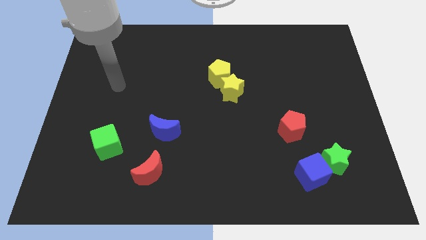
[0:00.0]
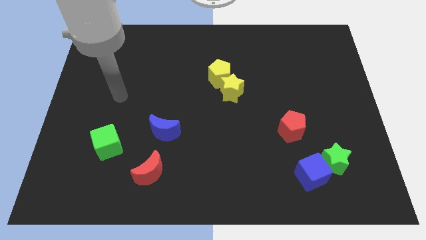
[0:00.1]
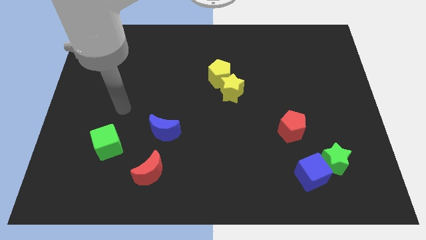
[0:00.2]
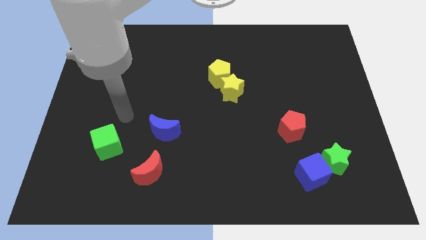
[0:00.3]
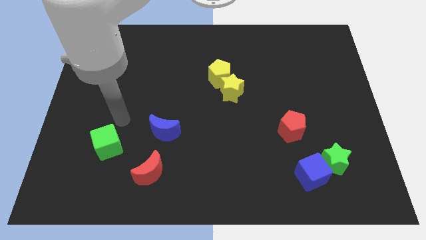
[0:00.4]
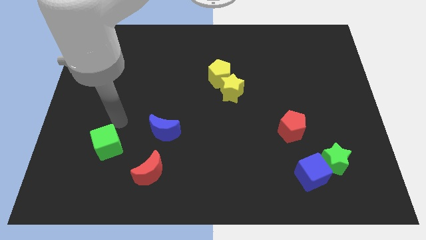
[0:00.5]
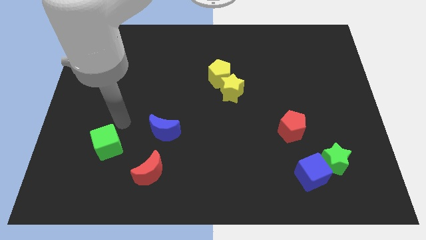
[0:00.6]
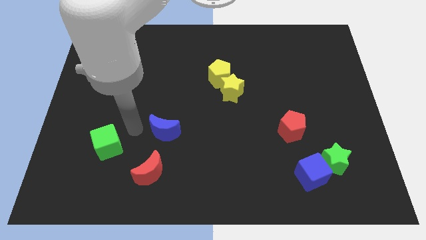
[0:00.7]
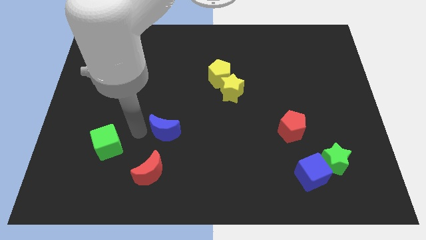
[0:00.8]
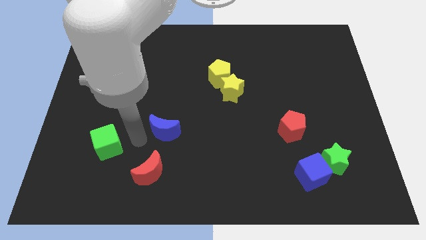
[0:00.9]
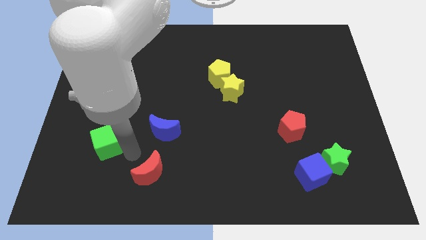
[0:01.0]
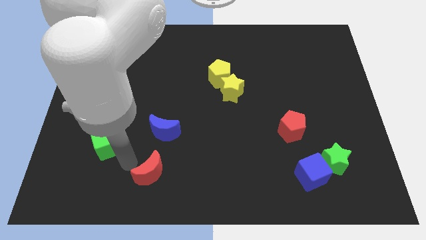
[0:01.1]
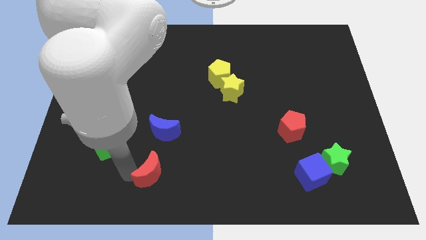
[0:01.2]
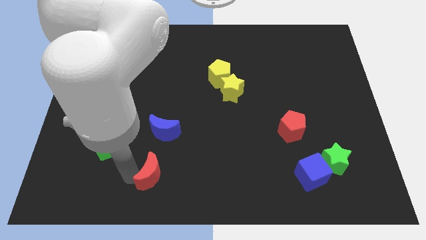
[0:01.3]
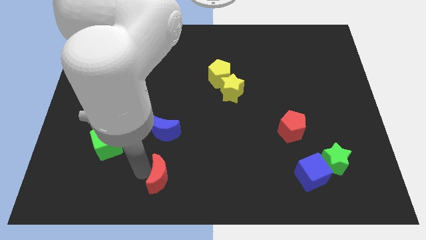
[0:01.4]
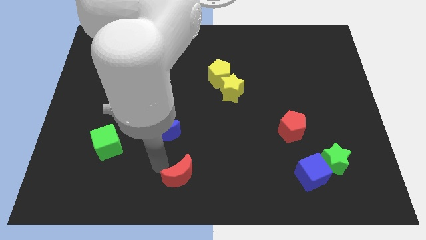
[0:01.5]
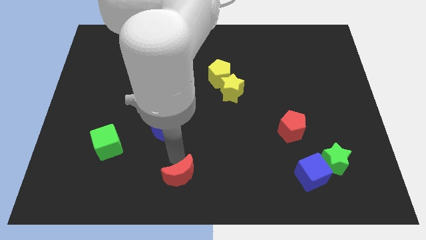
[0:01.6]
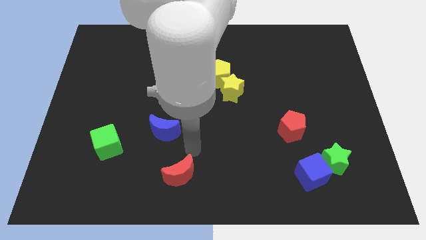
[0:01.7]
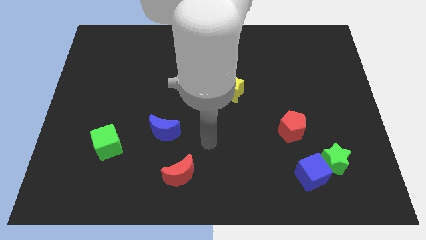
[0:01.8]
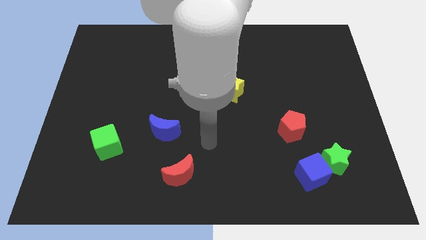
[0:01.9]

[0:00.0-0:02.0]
move red crescent slightly to the right

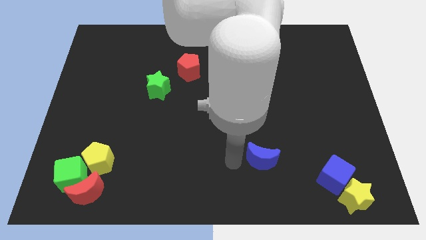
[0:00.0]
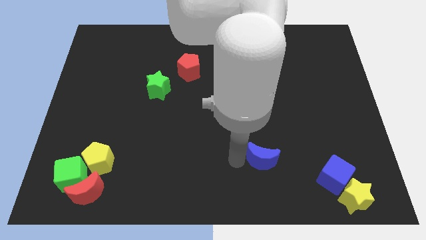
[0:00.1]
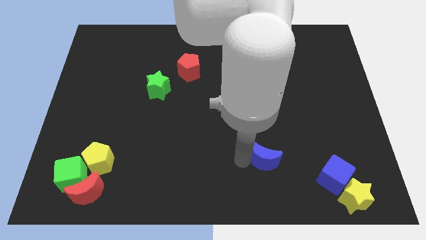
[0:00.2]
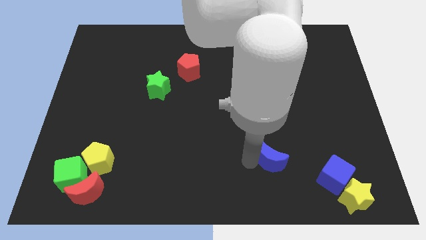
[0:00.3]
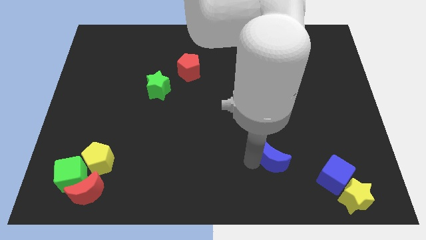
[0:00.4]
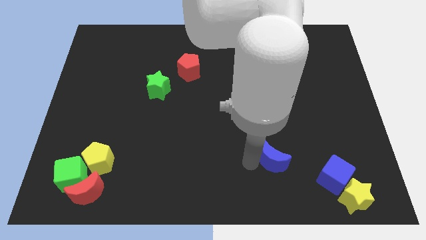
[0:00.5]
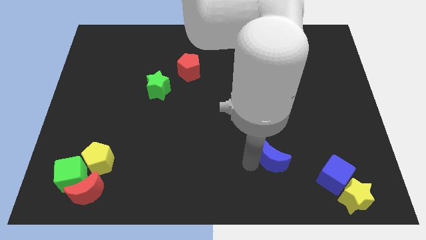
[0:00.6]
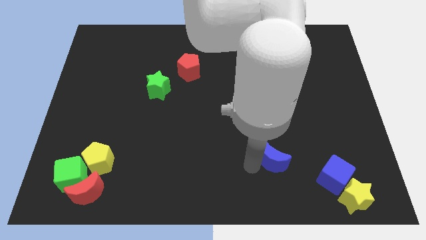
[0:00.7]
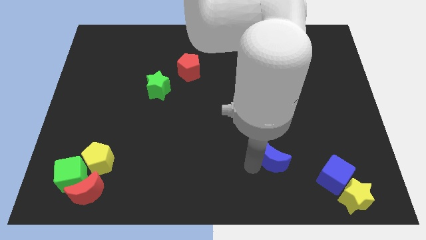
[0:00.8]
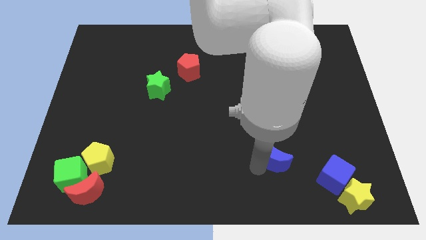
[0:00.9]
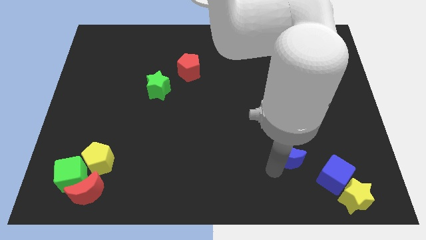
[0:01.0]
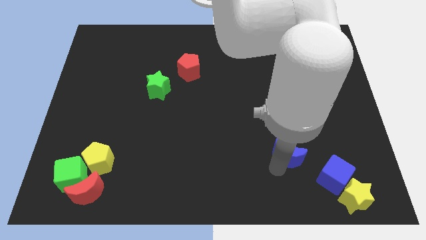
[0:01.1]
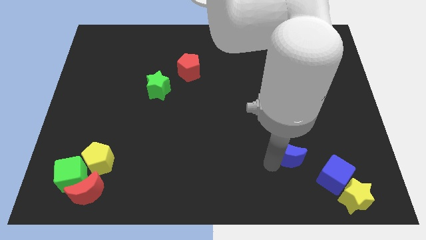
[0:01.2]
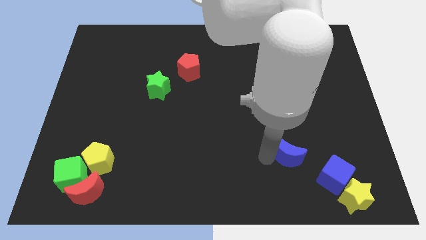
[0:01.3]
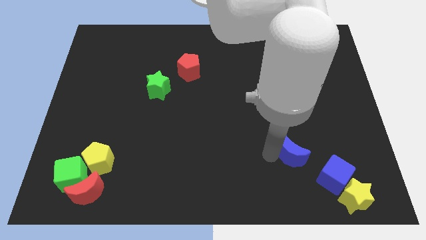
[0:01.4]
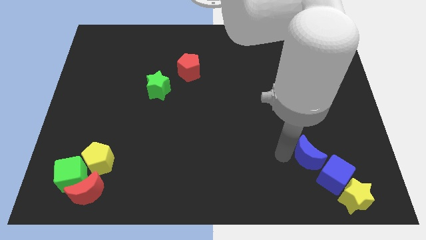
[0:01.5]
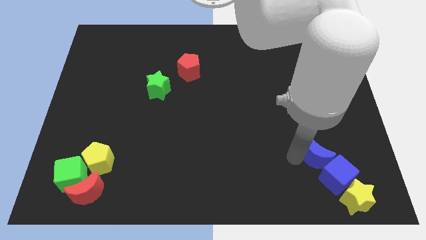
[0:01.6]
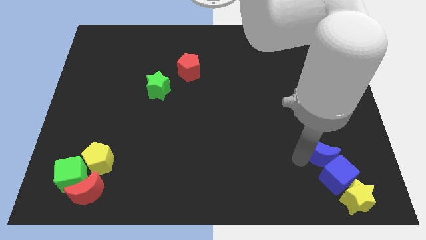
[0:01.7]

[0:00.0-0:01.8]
push the blue crescent into the blue cube

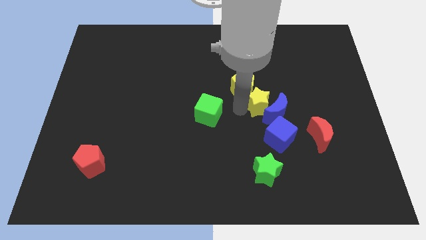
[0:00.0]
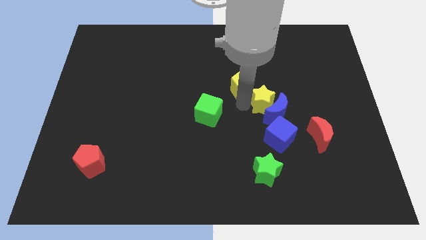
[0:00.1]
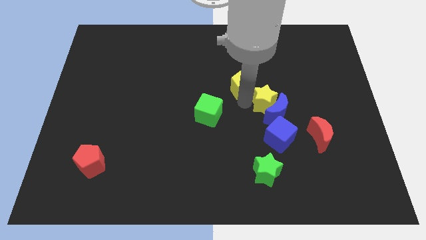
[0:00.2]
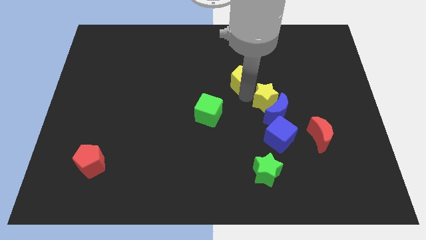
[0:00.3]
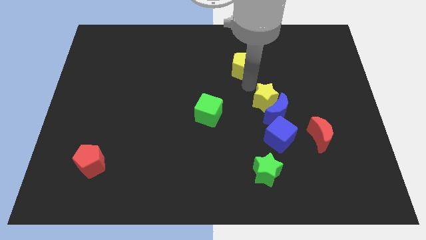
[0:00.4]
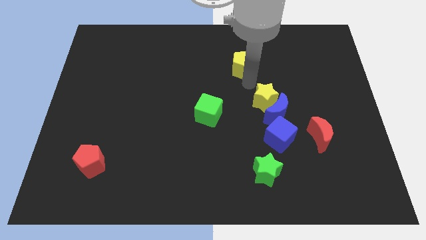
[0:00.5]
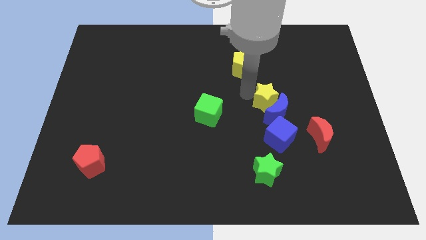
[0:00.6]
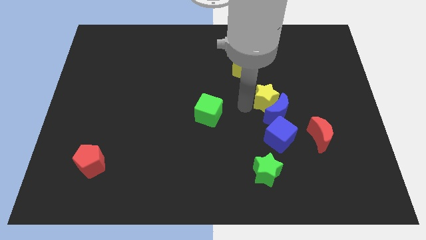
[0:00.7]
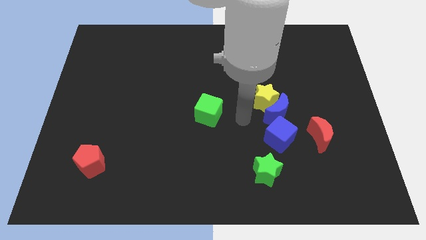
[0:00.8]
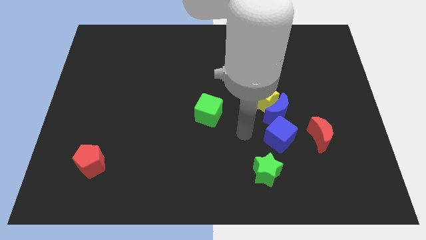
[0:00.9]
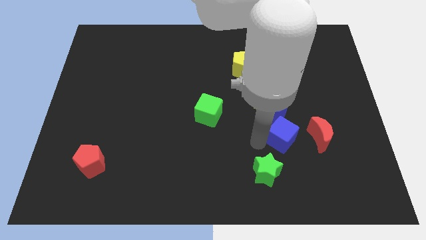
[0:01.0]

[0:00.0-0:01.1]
push the yellow pentagon towards the top side of the board

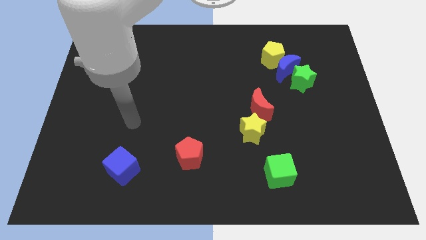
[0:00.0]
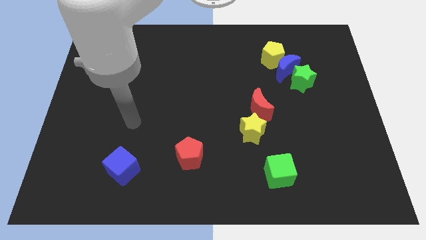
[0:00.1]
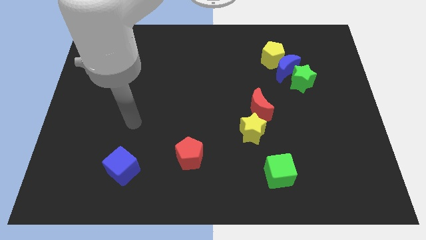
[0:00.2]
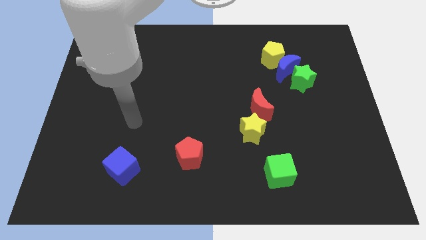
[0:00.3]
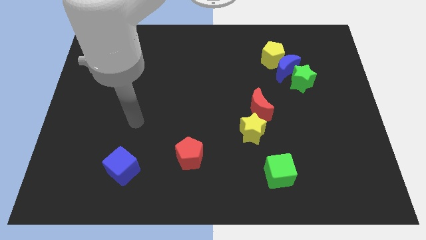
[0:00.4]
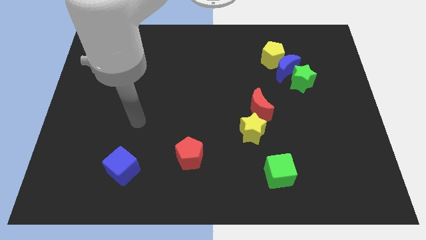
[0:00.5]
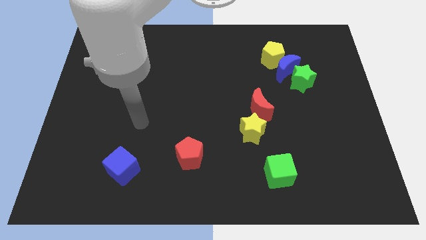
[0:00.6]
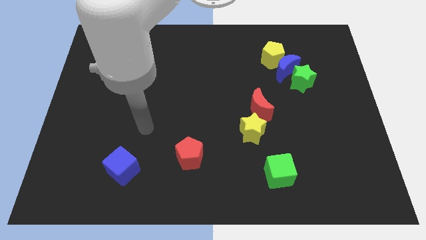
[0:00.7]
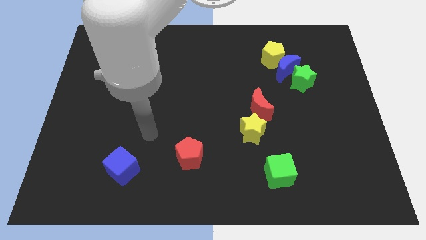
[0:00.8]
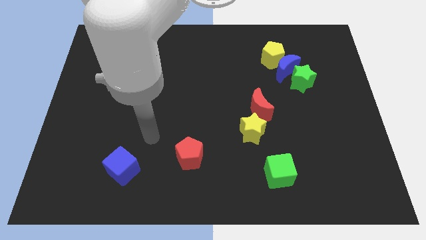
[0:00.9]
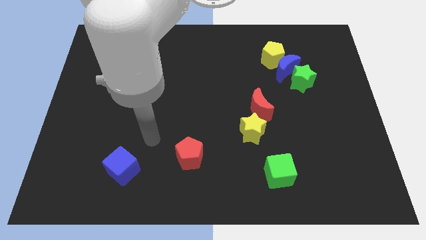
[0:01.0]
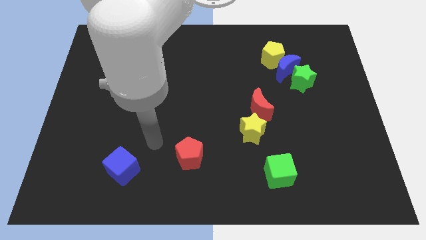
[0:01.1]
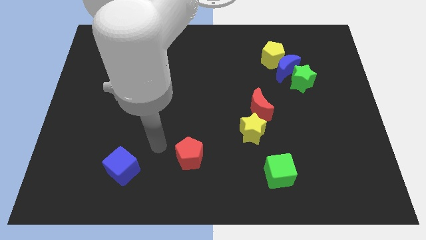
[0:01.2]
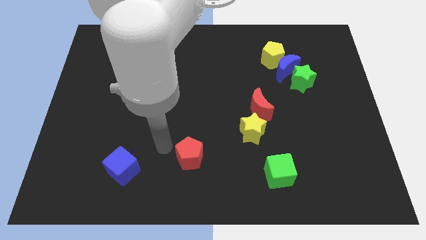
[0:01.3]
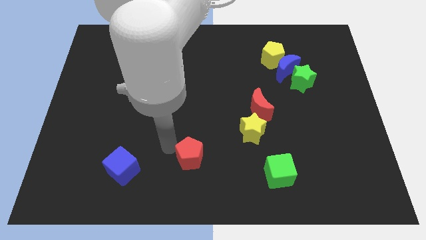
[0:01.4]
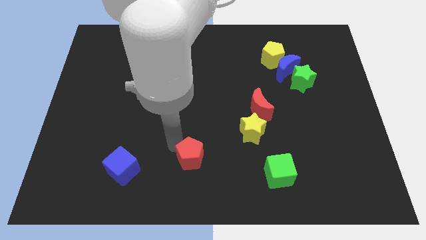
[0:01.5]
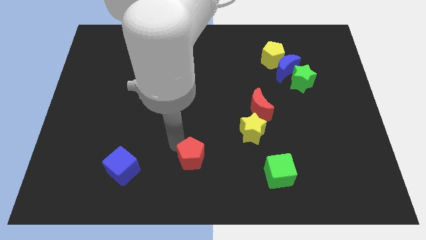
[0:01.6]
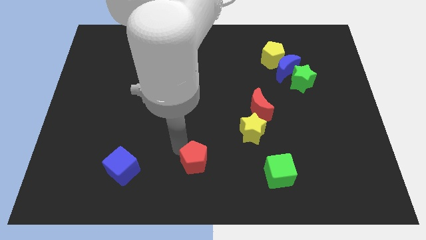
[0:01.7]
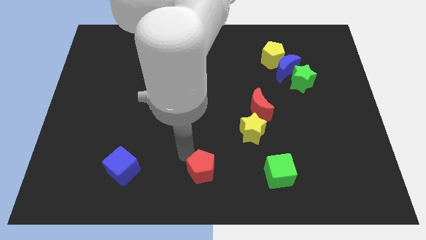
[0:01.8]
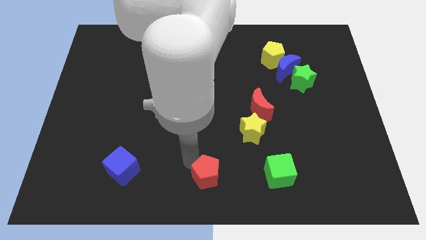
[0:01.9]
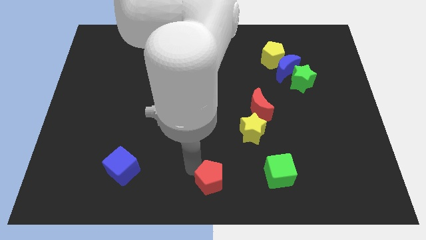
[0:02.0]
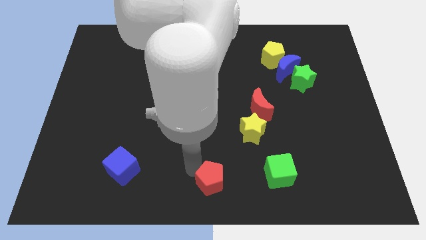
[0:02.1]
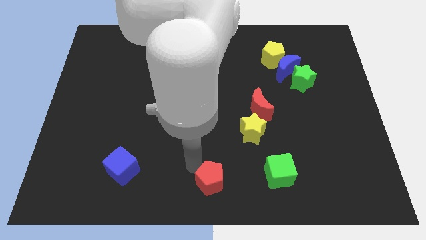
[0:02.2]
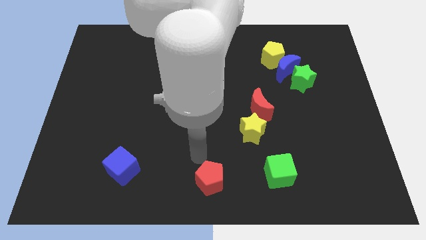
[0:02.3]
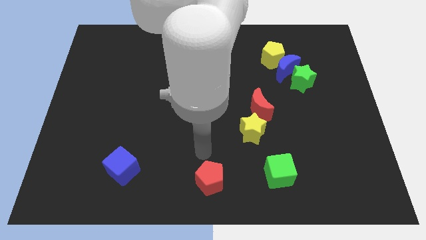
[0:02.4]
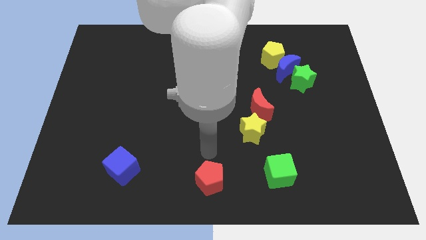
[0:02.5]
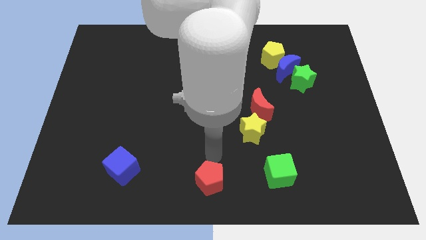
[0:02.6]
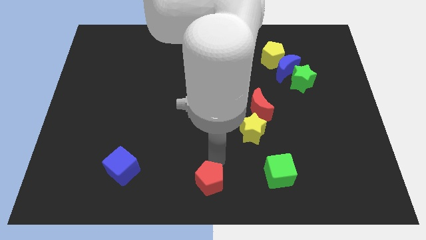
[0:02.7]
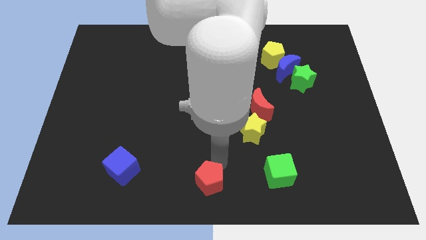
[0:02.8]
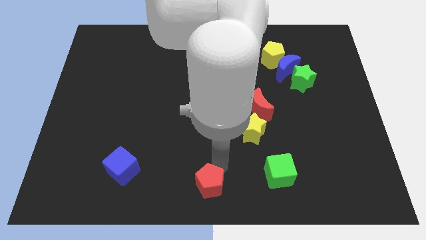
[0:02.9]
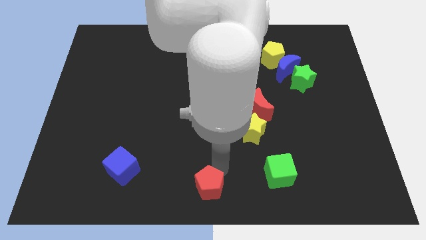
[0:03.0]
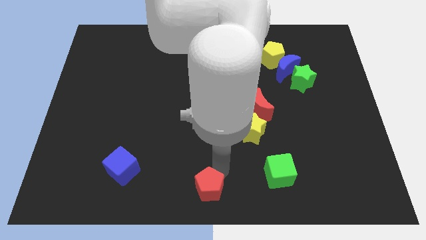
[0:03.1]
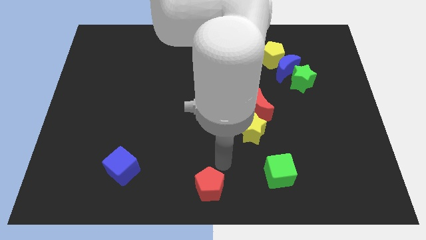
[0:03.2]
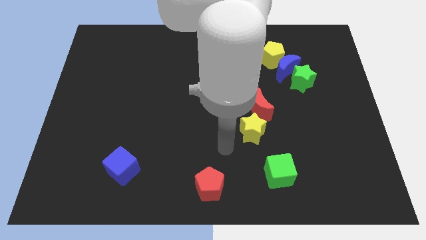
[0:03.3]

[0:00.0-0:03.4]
place red pentagon to the bottom center of the board

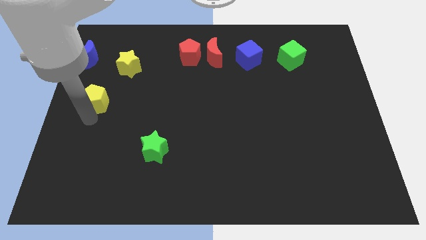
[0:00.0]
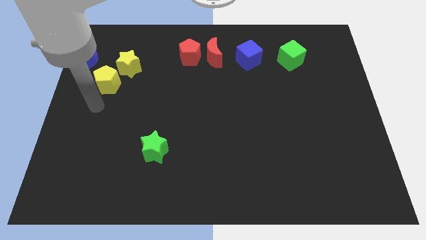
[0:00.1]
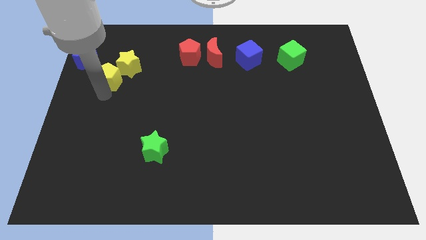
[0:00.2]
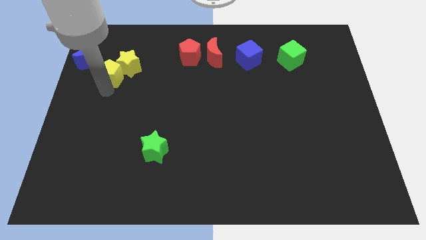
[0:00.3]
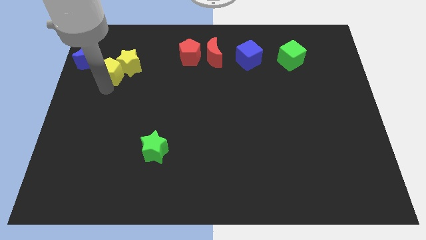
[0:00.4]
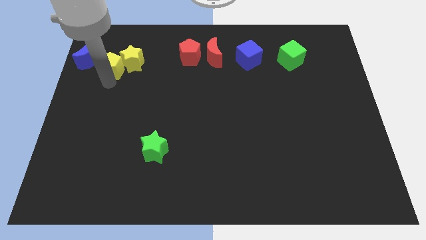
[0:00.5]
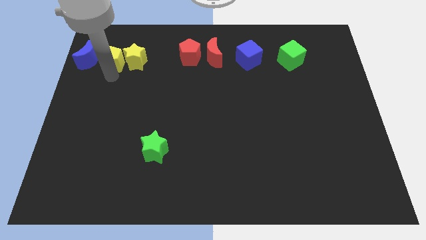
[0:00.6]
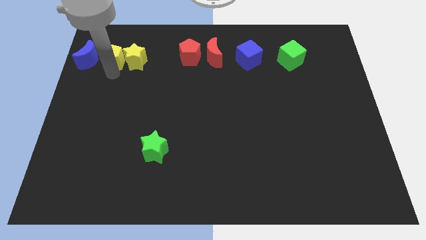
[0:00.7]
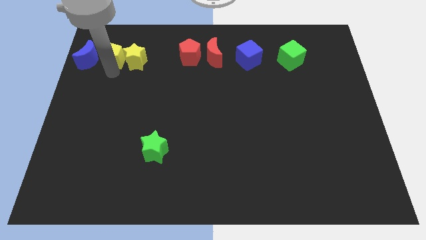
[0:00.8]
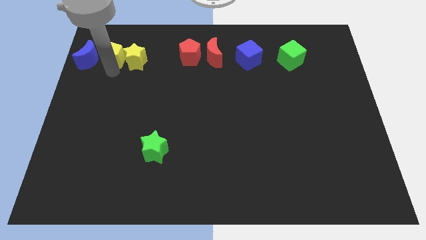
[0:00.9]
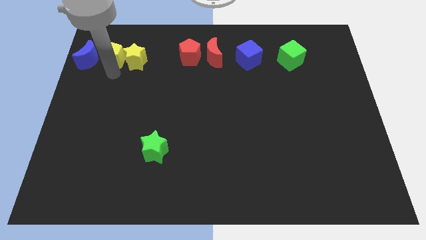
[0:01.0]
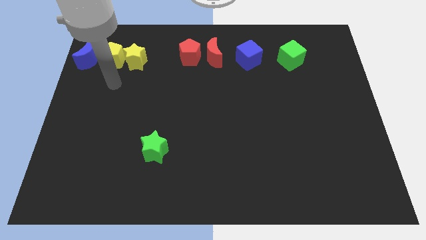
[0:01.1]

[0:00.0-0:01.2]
slide the yellow pentagon into the yellow star
